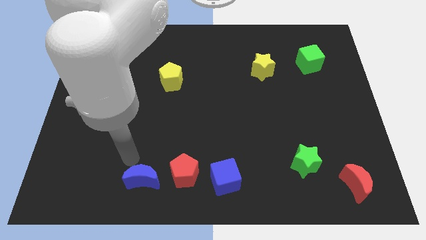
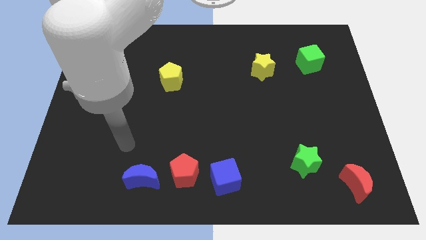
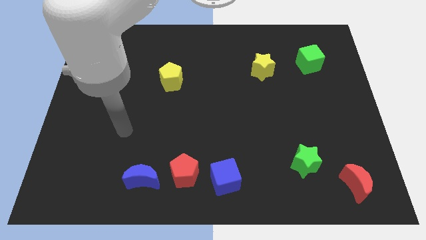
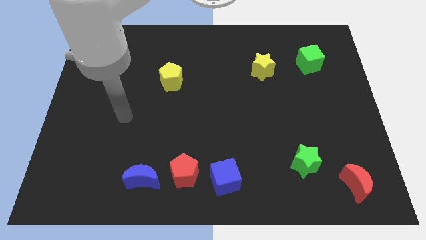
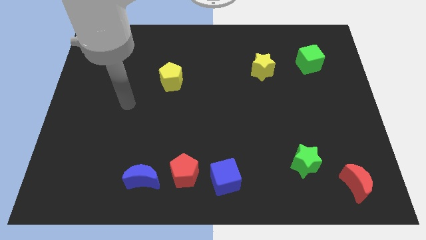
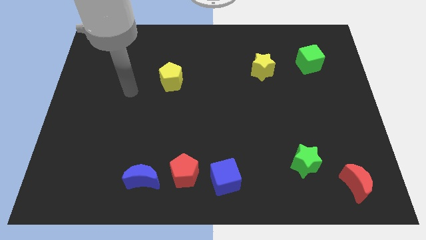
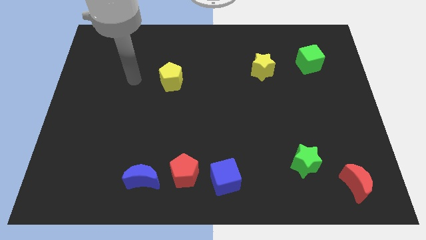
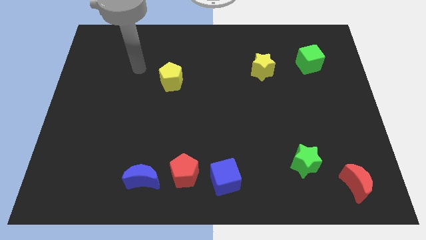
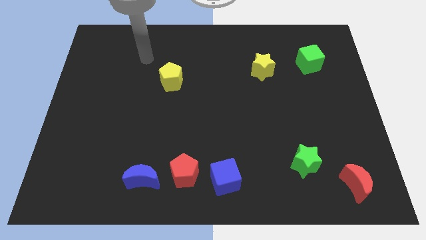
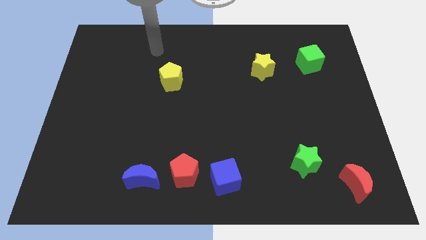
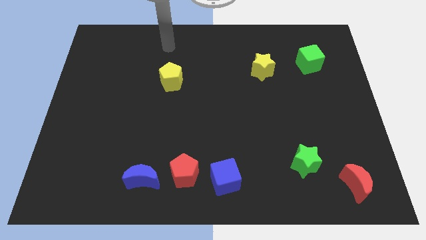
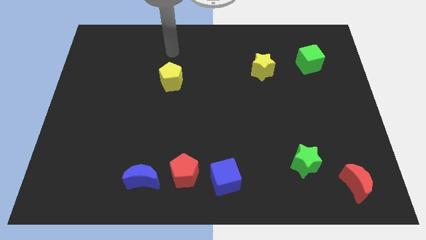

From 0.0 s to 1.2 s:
move your arm to the top side of the yellow pentagon

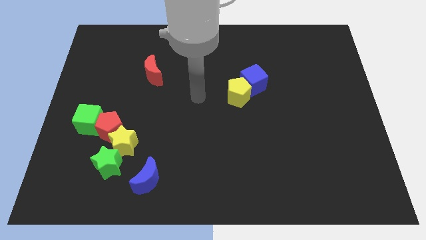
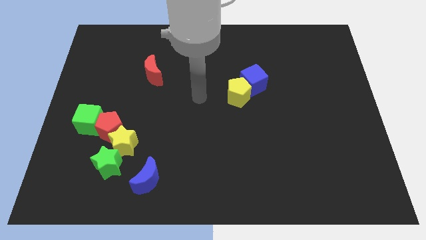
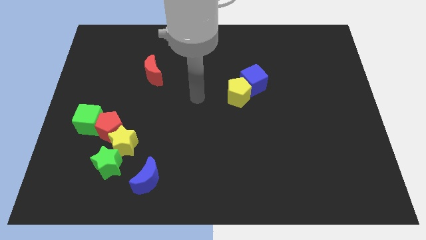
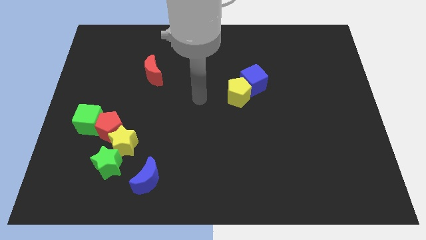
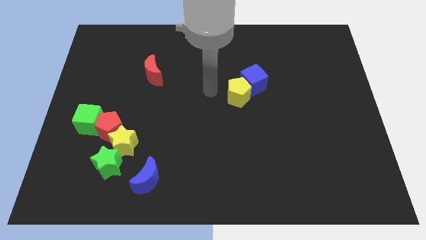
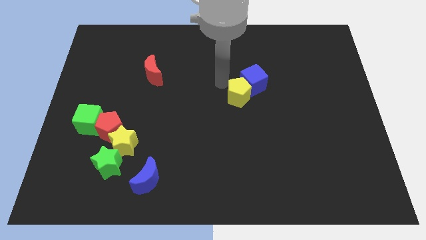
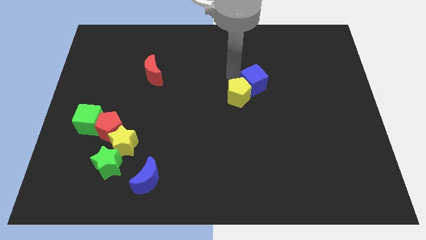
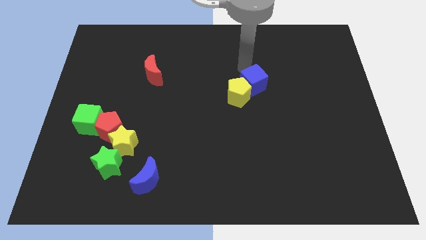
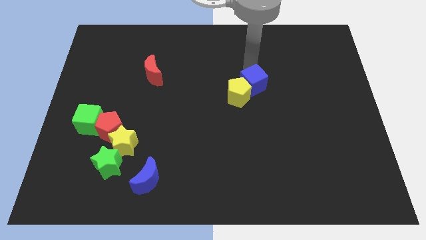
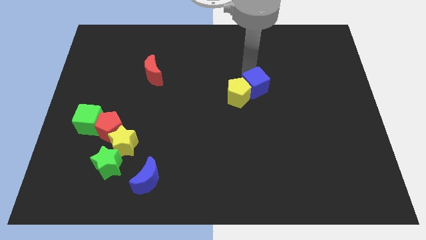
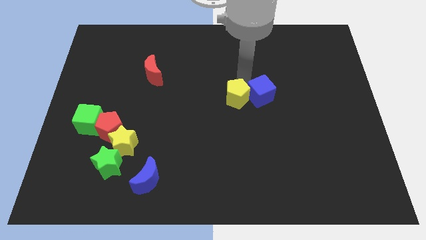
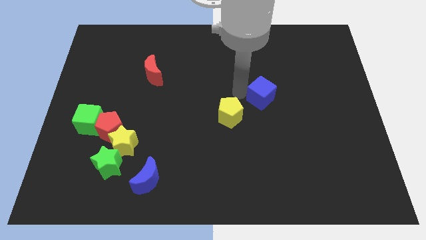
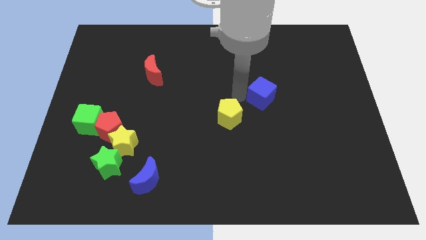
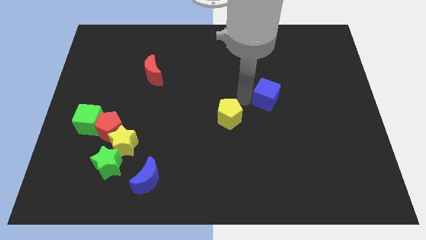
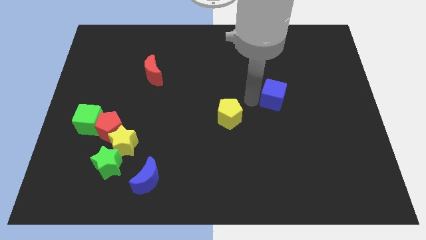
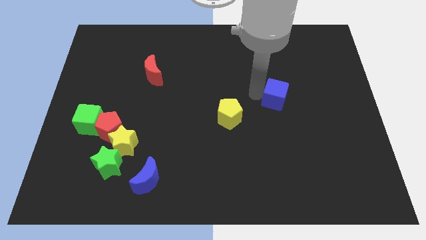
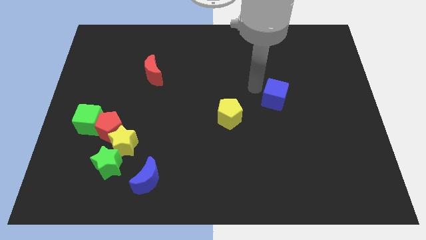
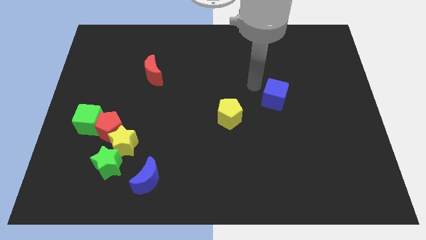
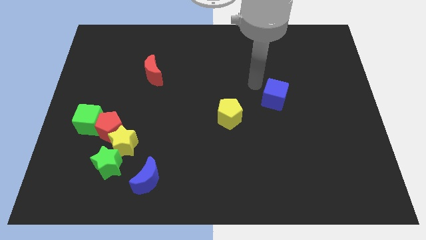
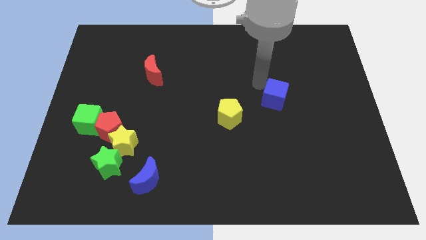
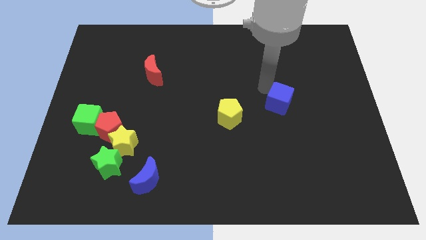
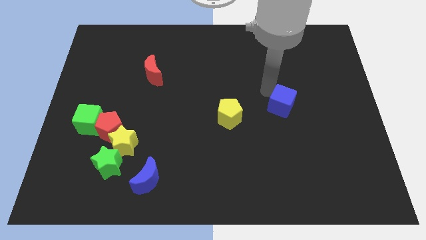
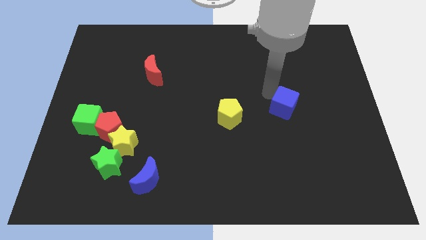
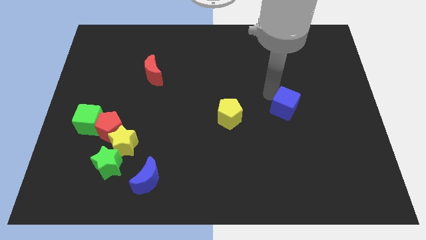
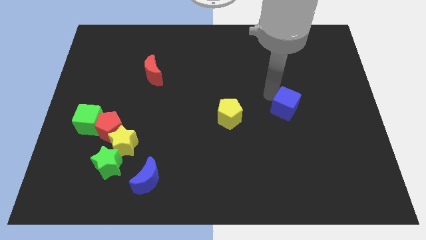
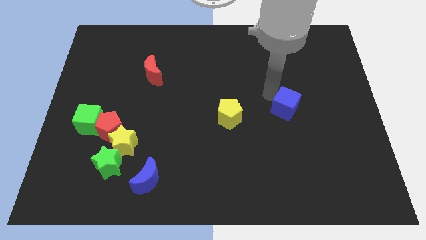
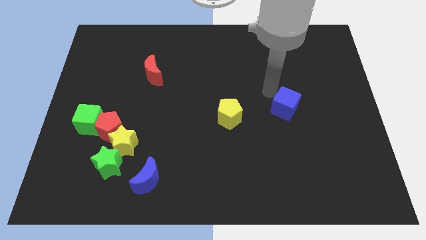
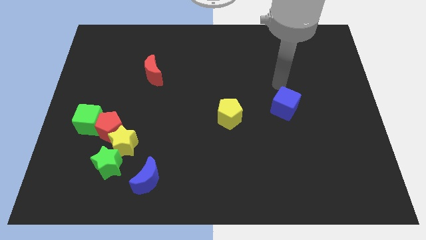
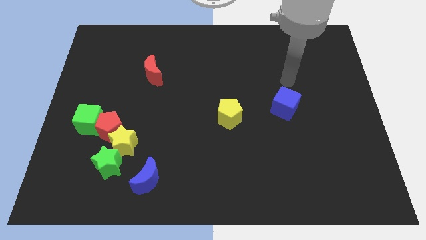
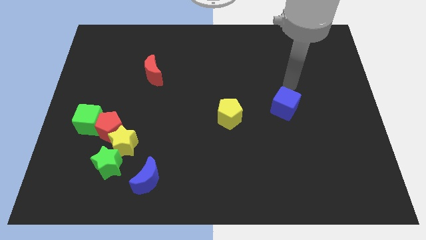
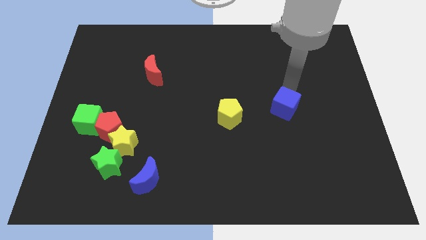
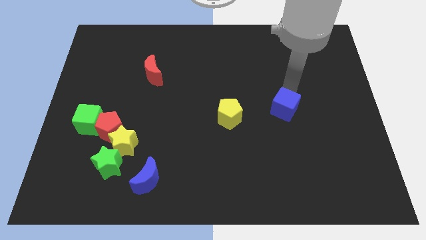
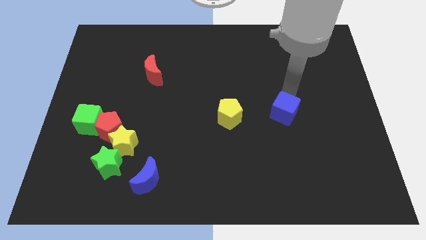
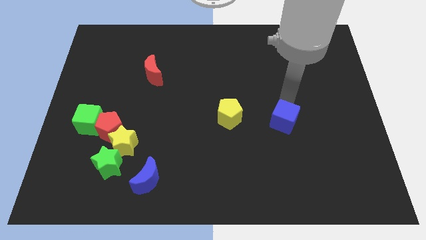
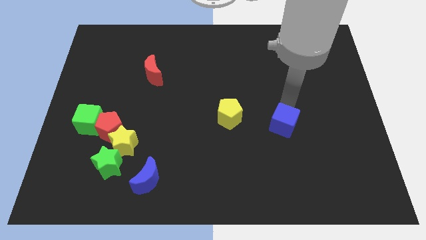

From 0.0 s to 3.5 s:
place the blue cube right to the yellow pentagon

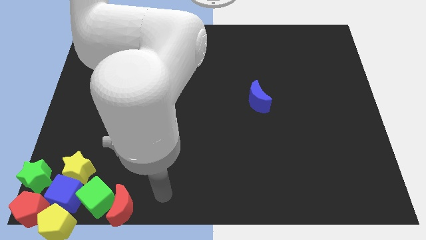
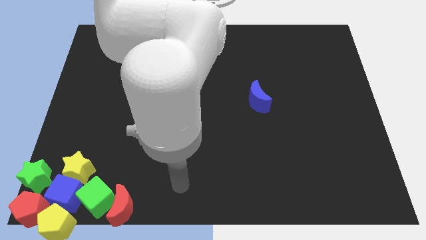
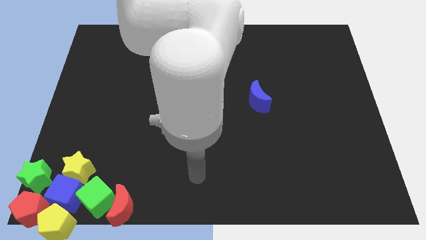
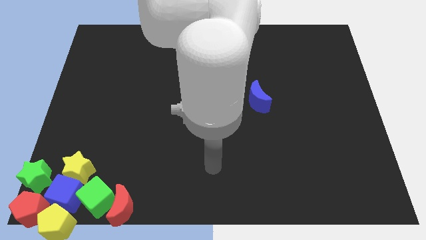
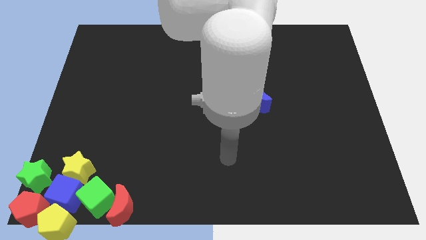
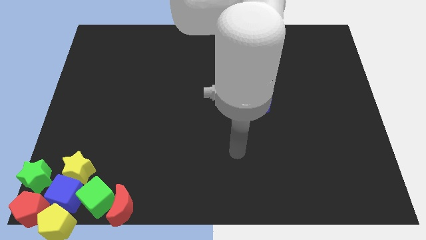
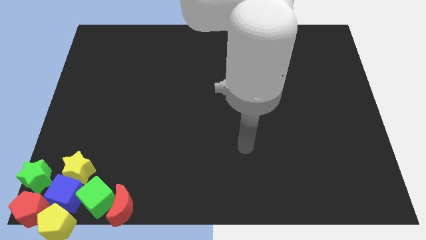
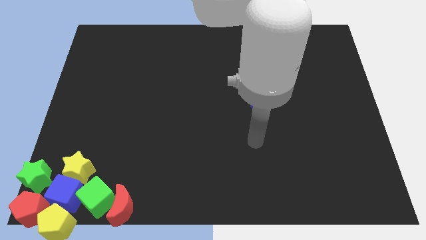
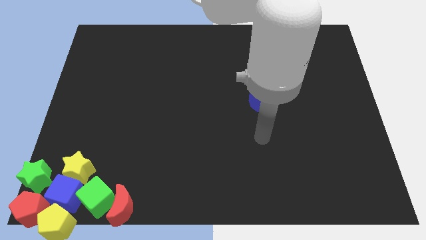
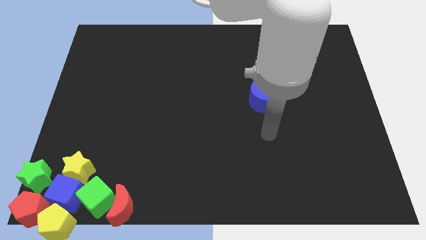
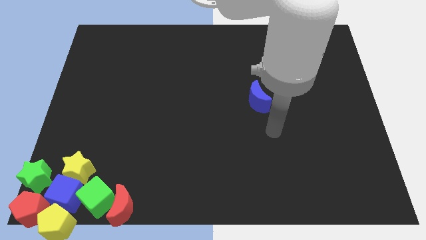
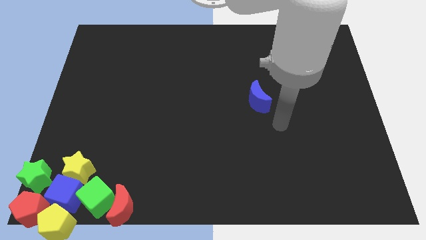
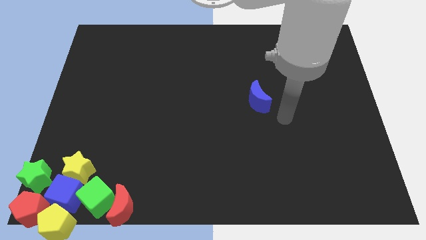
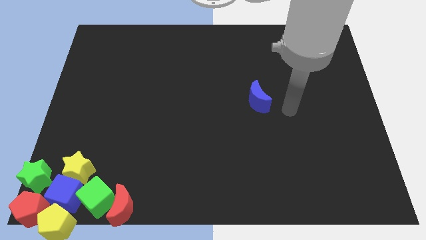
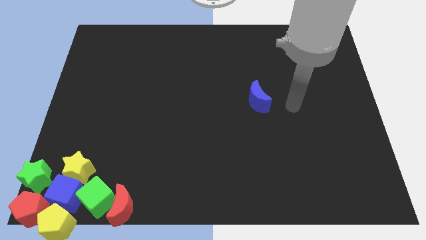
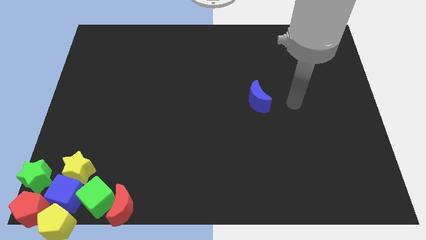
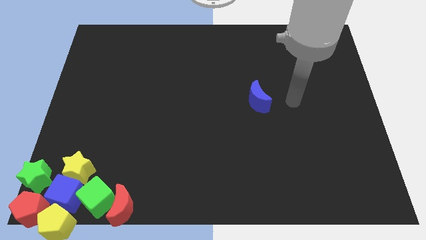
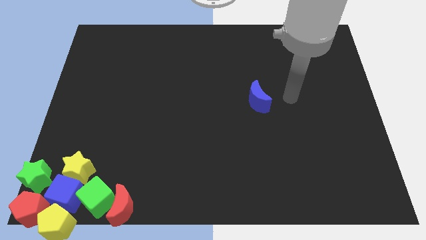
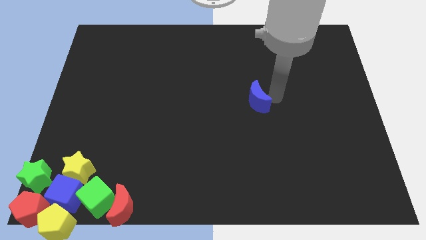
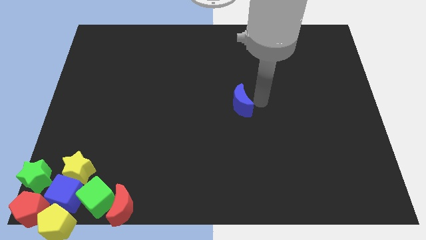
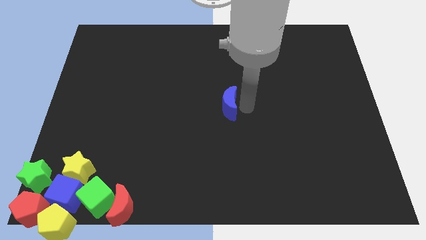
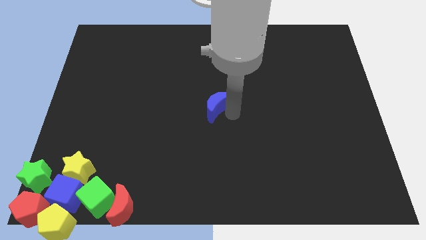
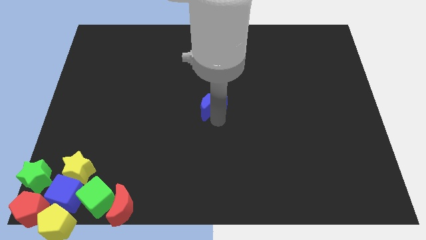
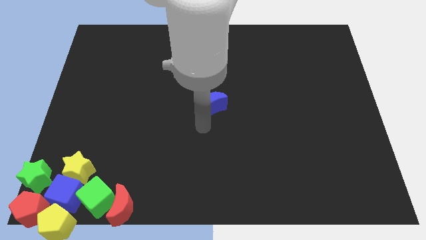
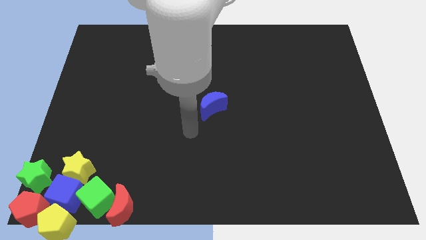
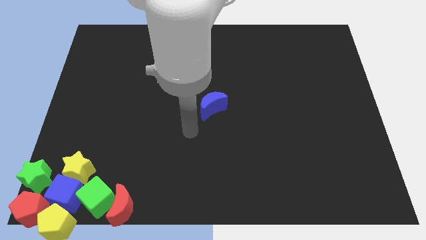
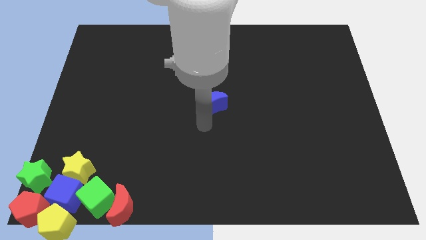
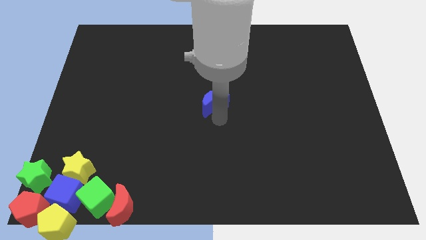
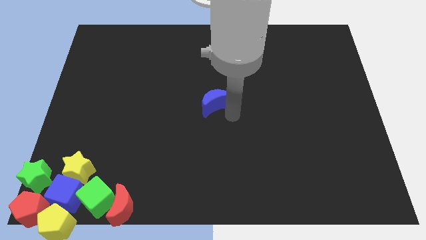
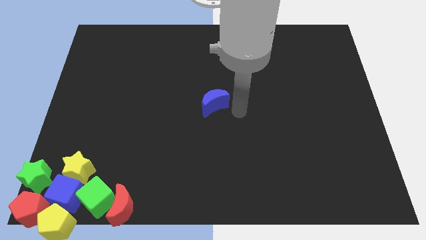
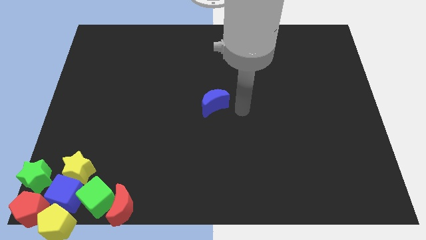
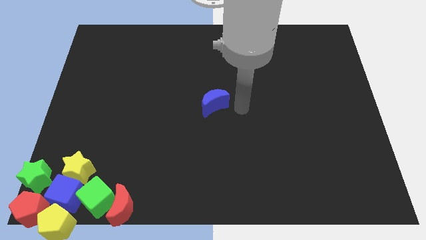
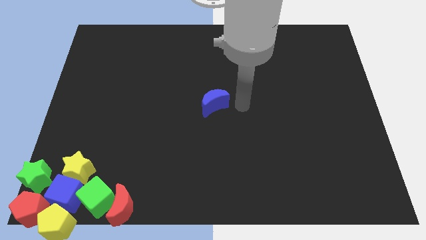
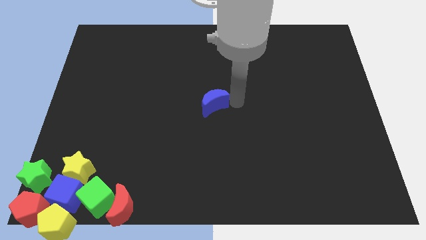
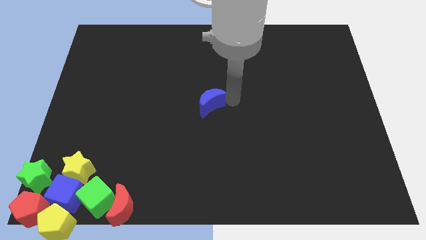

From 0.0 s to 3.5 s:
drag the blue crescent towards center

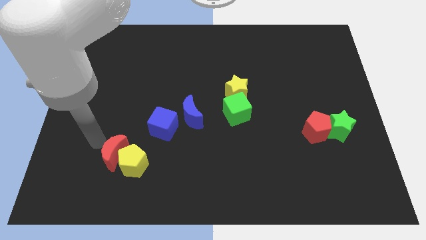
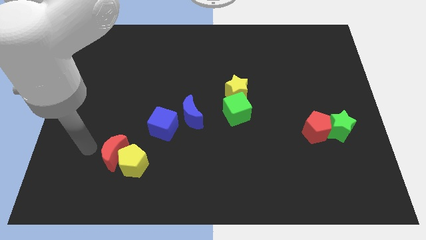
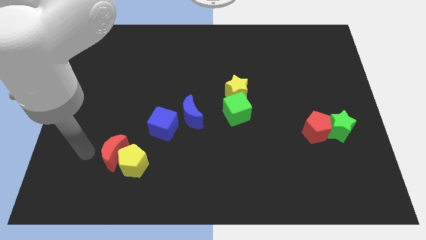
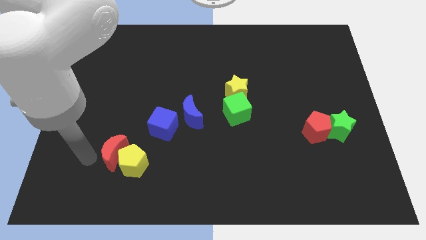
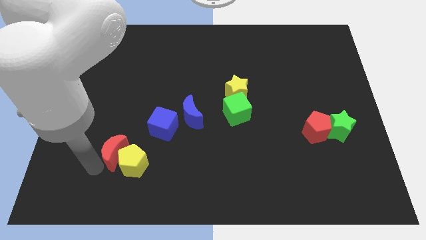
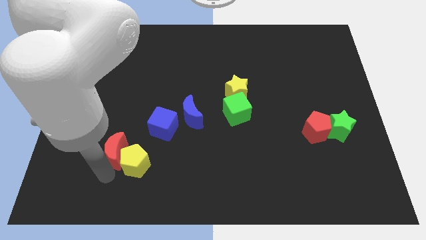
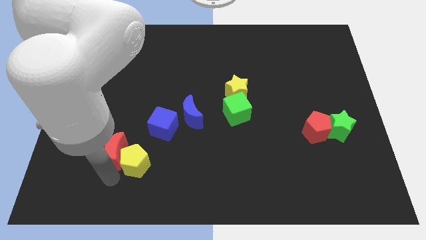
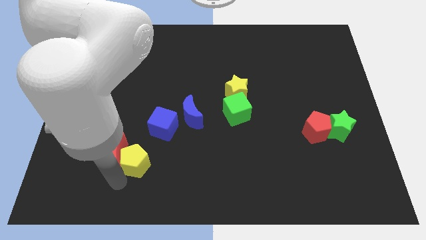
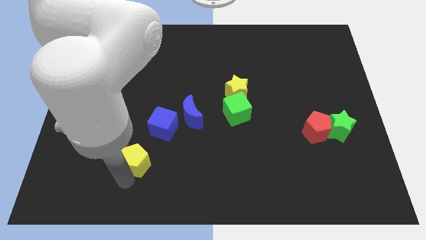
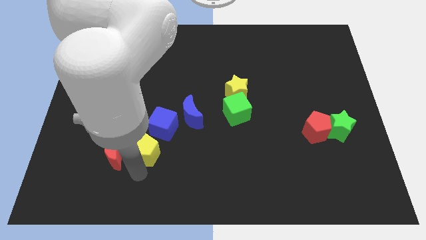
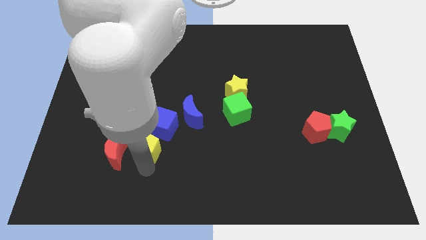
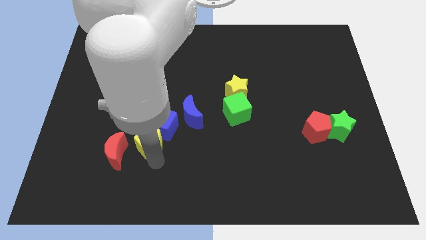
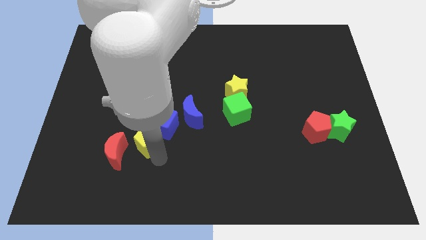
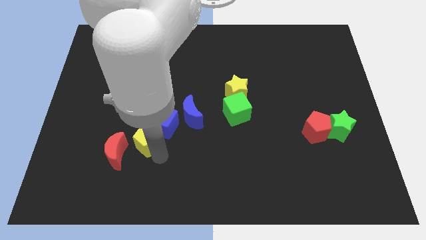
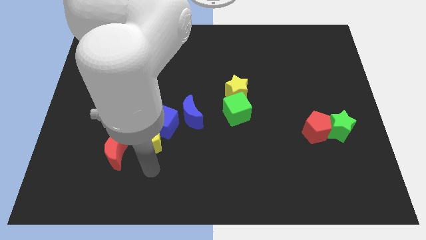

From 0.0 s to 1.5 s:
separate yellow pentagon from the red moon
